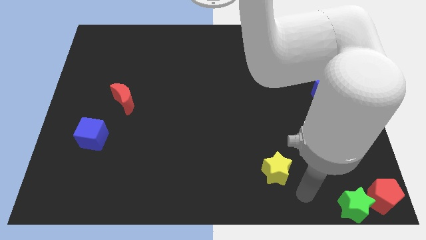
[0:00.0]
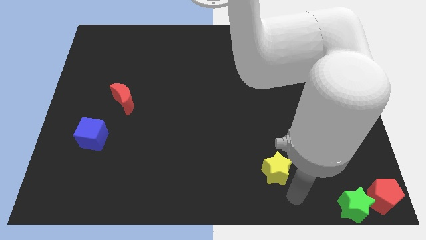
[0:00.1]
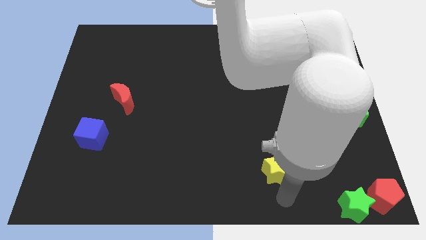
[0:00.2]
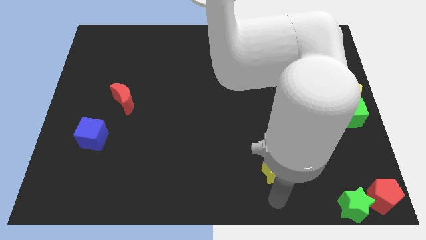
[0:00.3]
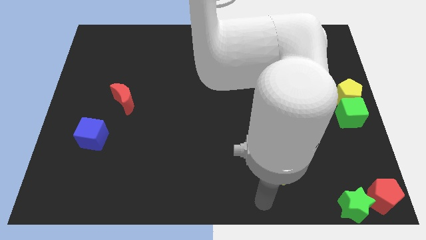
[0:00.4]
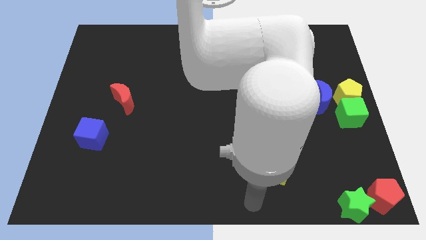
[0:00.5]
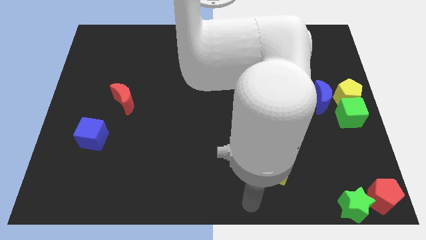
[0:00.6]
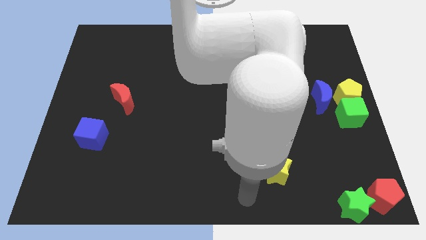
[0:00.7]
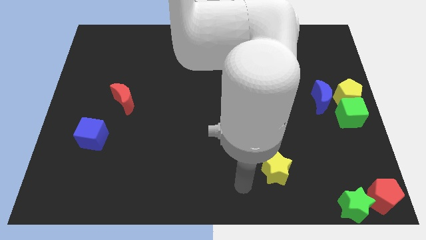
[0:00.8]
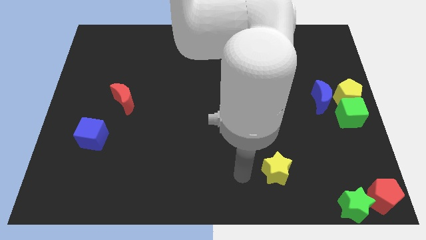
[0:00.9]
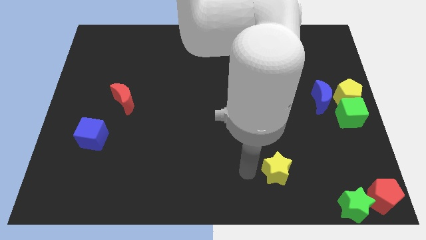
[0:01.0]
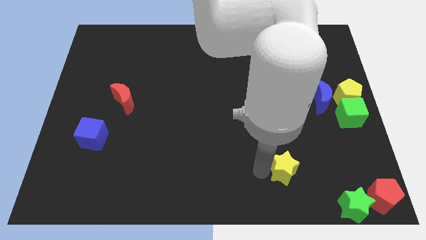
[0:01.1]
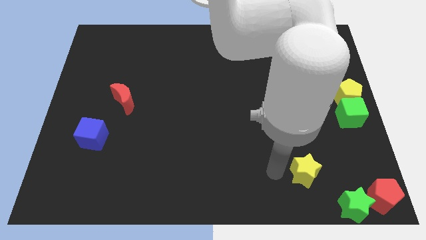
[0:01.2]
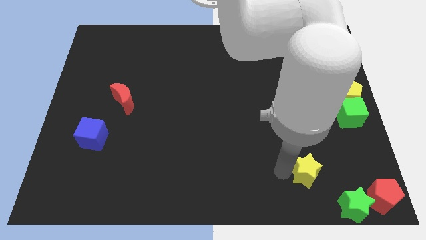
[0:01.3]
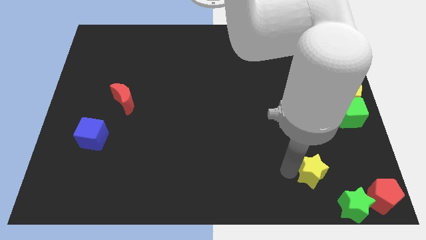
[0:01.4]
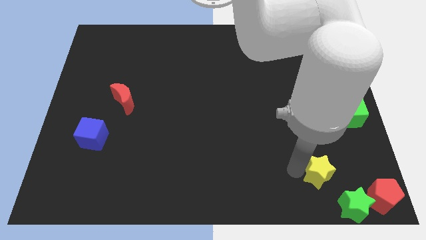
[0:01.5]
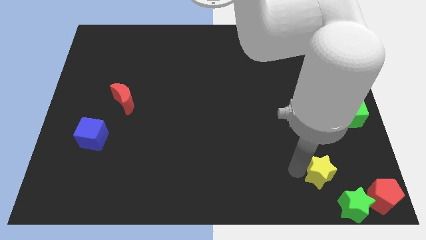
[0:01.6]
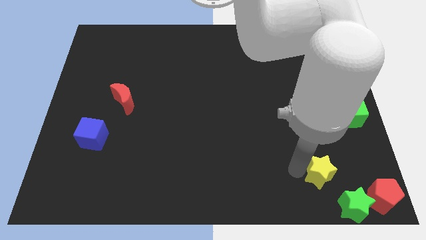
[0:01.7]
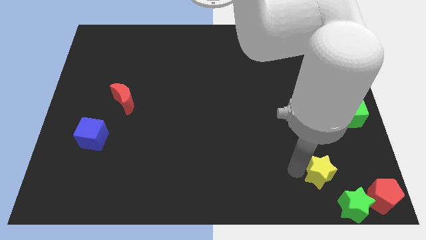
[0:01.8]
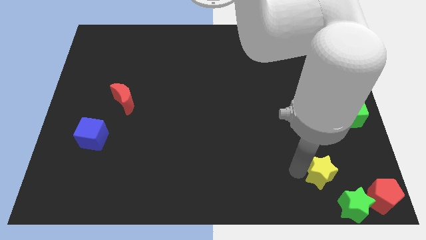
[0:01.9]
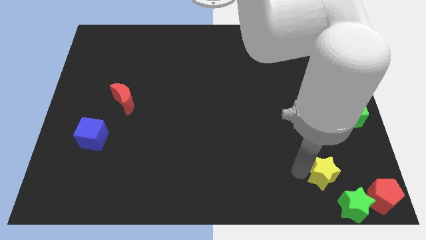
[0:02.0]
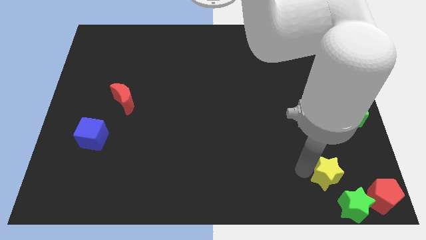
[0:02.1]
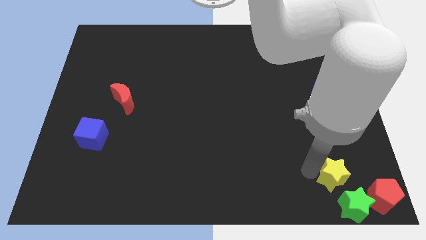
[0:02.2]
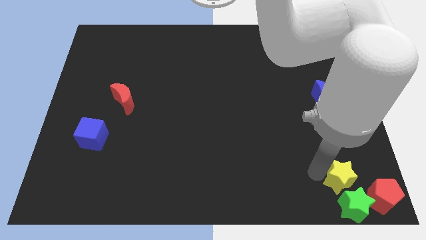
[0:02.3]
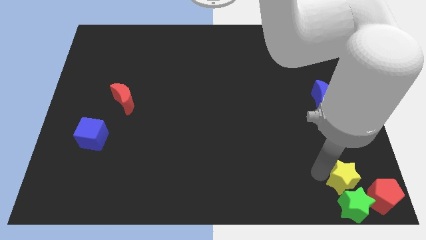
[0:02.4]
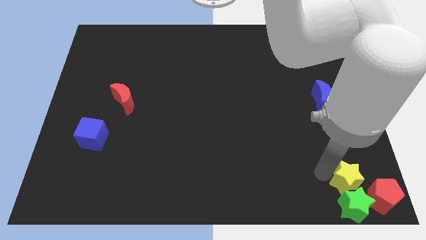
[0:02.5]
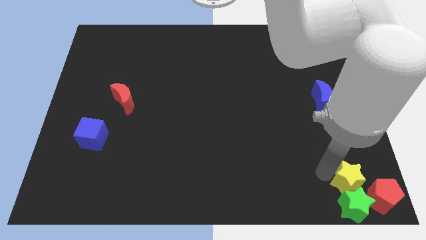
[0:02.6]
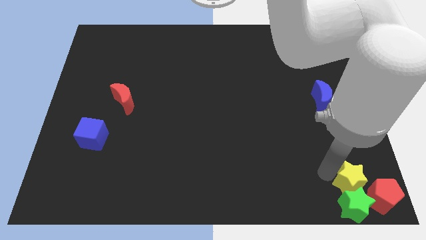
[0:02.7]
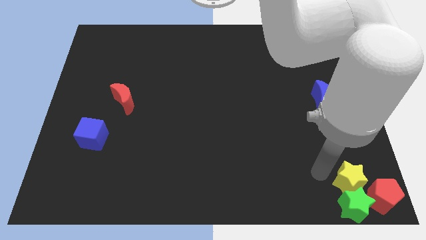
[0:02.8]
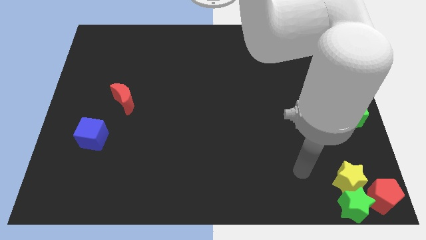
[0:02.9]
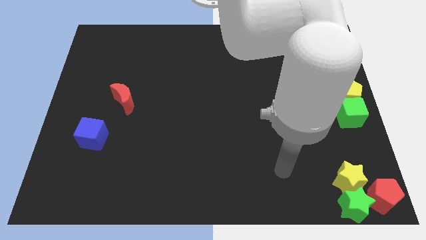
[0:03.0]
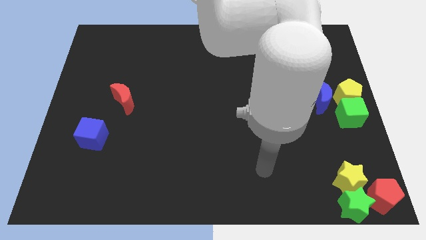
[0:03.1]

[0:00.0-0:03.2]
push the yellow star top to the green star

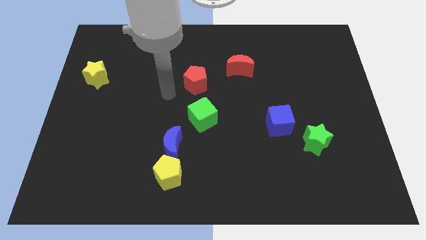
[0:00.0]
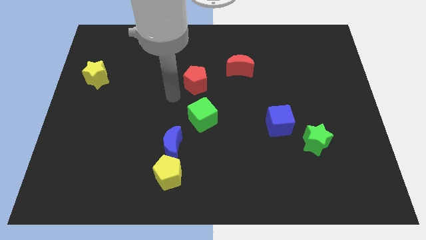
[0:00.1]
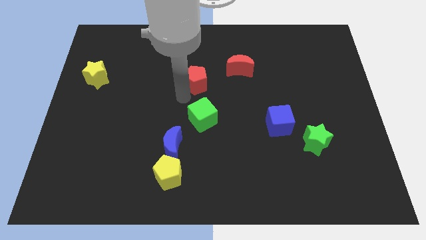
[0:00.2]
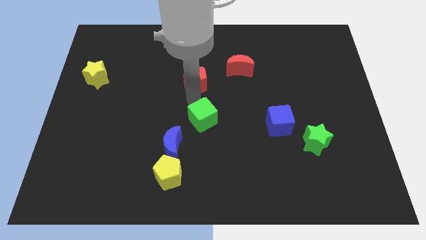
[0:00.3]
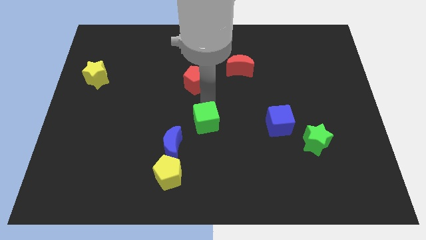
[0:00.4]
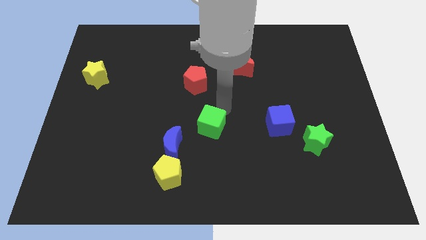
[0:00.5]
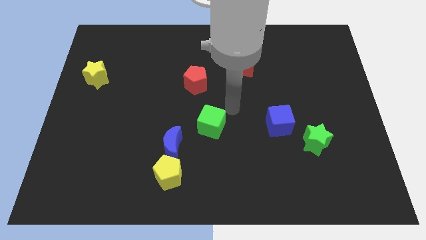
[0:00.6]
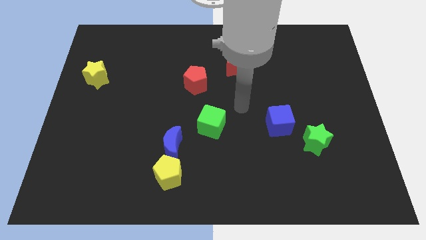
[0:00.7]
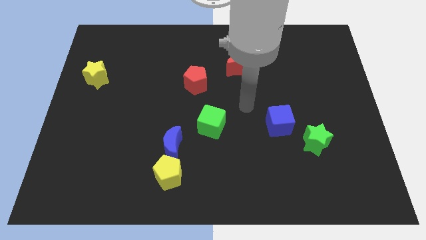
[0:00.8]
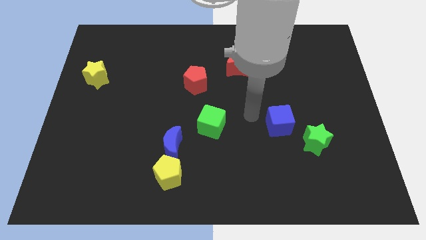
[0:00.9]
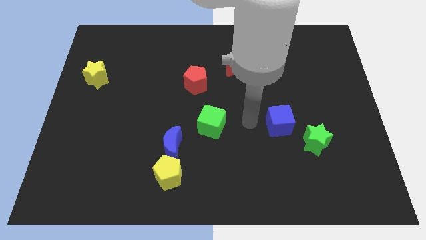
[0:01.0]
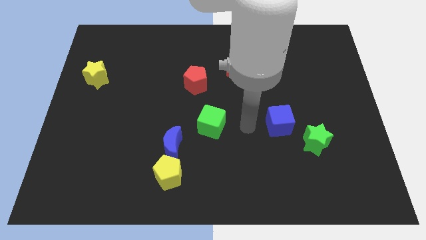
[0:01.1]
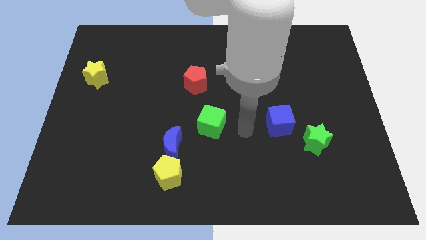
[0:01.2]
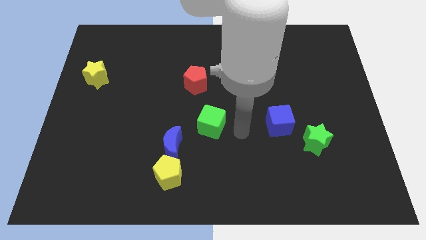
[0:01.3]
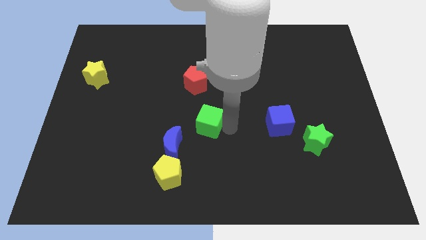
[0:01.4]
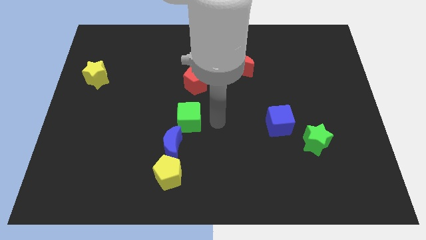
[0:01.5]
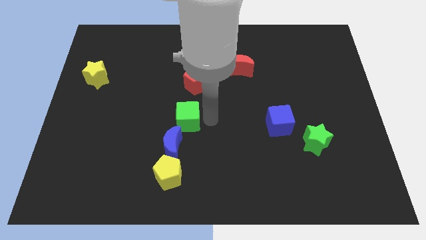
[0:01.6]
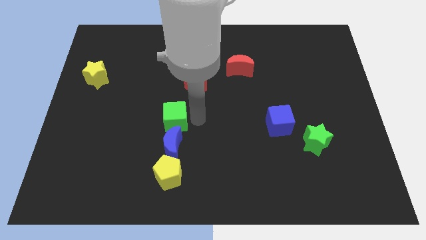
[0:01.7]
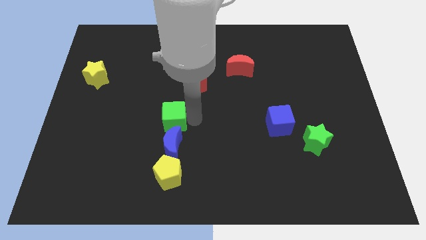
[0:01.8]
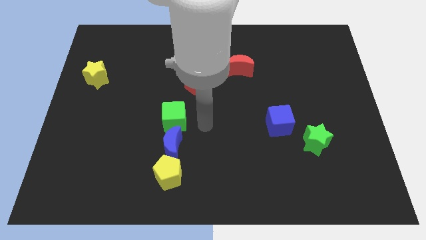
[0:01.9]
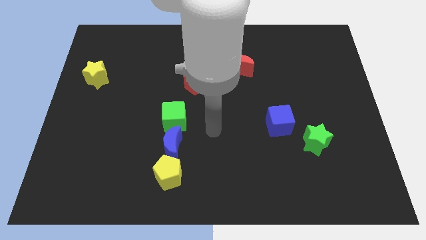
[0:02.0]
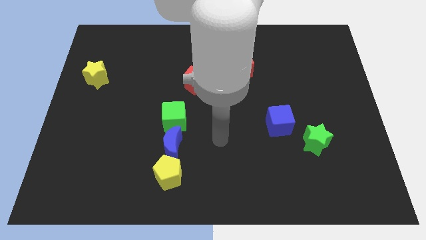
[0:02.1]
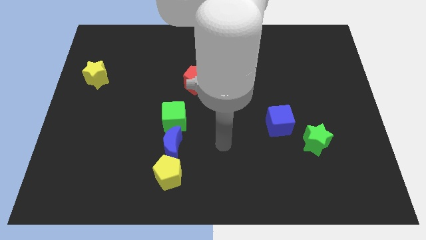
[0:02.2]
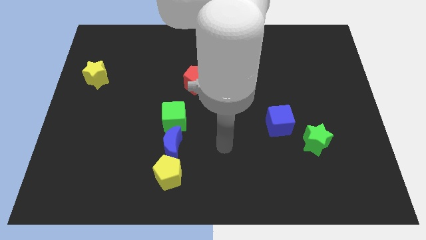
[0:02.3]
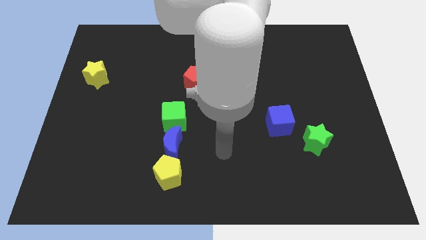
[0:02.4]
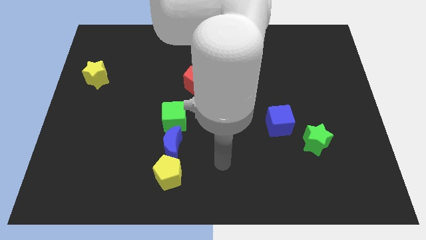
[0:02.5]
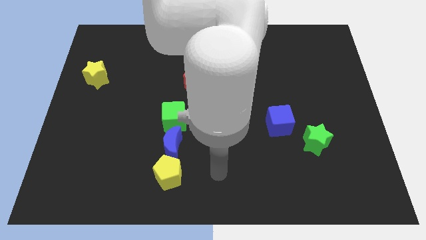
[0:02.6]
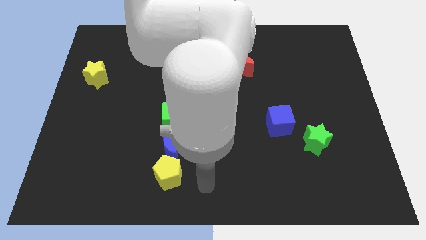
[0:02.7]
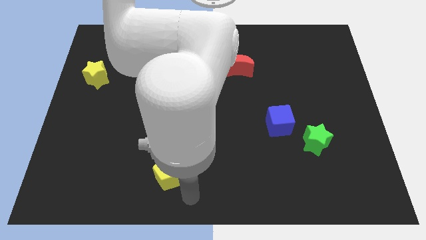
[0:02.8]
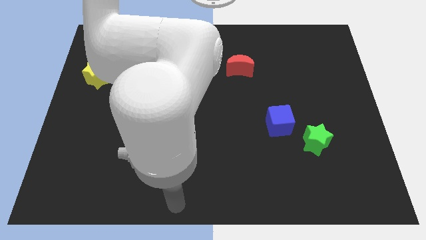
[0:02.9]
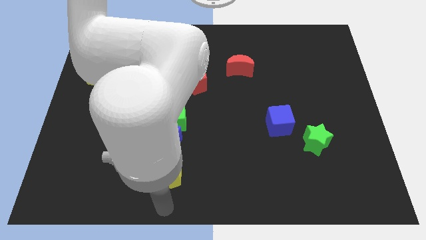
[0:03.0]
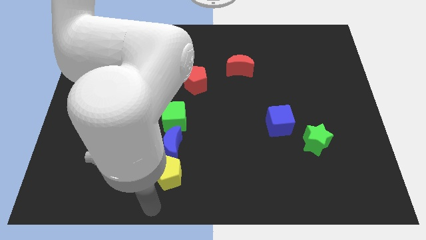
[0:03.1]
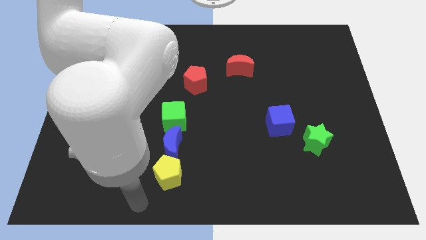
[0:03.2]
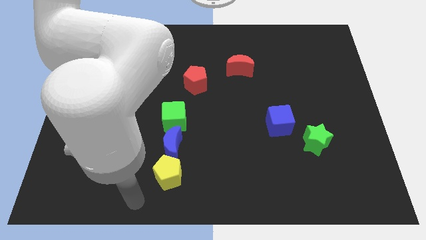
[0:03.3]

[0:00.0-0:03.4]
place the green cube above the blue crescent

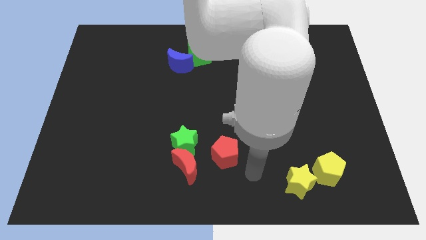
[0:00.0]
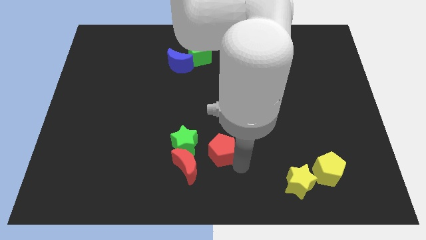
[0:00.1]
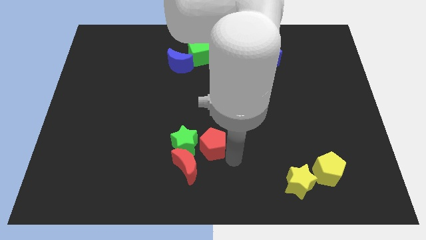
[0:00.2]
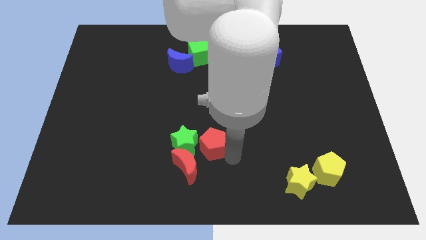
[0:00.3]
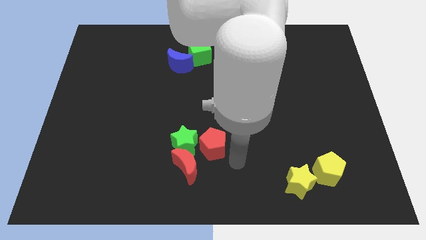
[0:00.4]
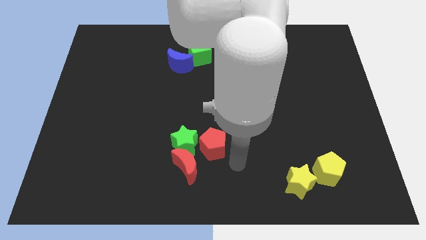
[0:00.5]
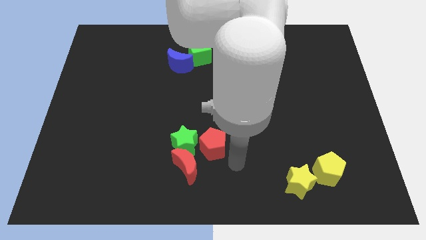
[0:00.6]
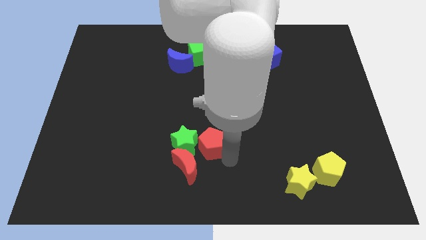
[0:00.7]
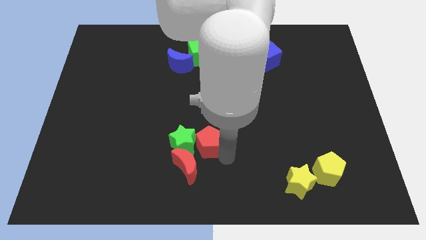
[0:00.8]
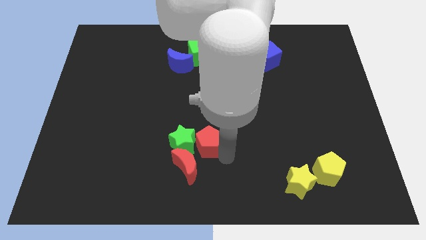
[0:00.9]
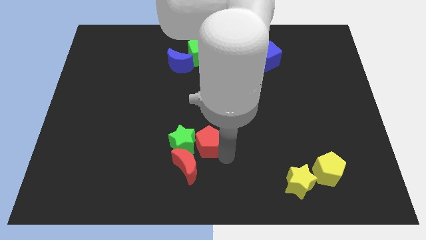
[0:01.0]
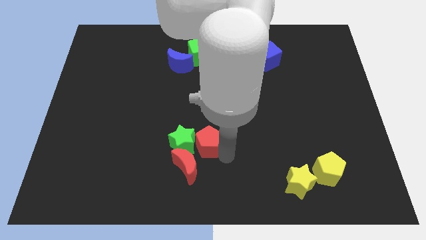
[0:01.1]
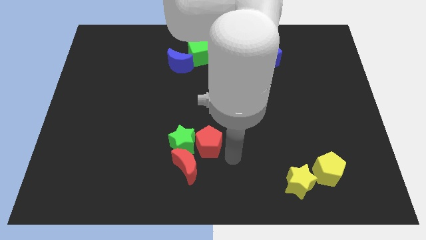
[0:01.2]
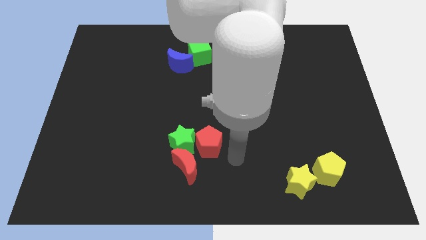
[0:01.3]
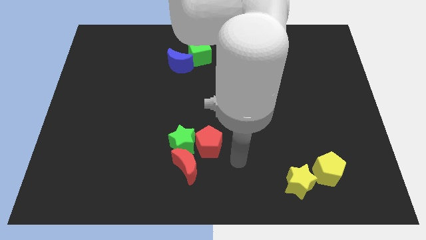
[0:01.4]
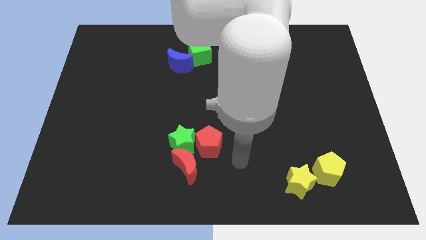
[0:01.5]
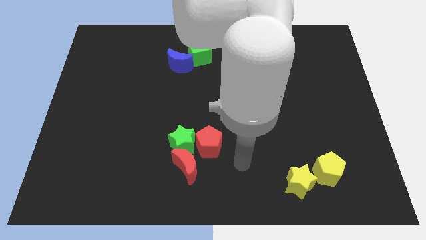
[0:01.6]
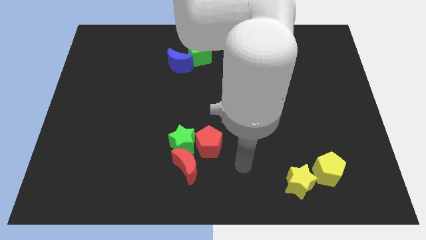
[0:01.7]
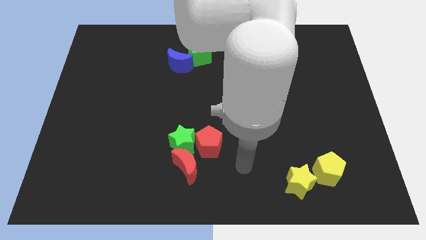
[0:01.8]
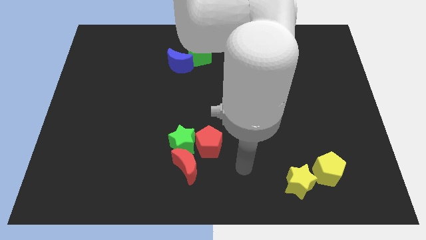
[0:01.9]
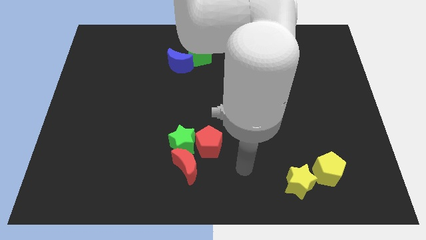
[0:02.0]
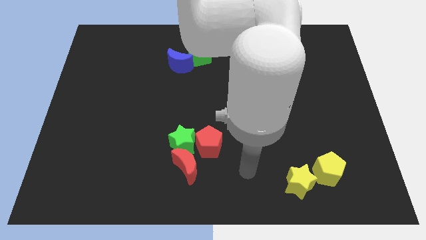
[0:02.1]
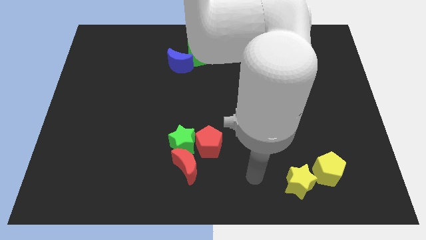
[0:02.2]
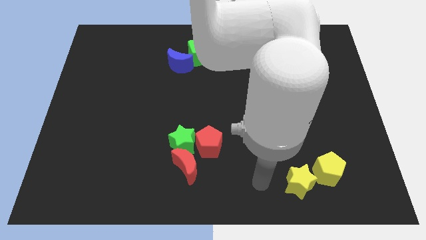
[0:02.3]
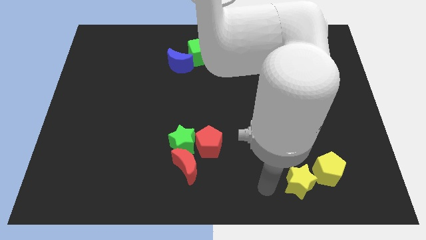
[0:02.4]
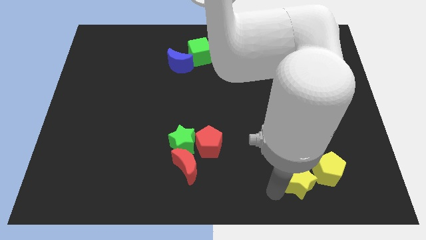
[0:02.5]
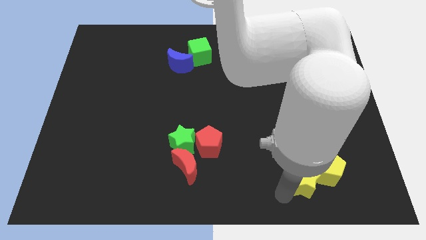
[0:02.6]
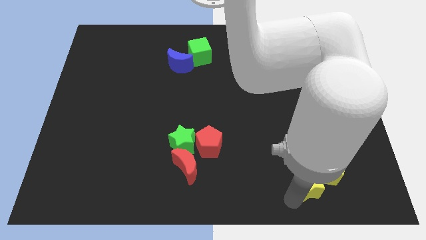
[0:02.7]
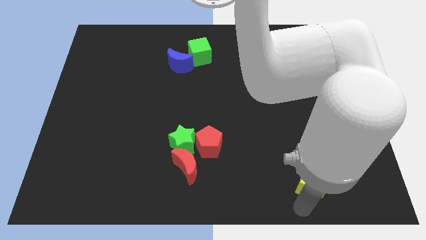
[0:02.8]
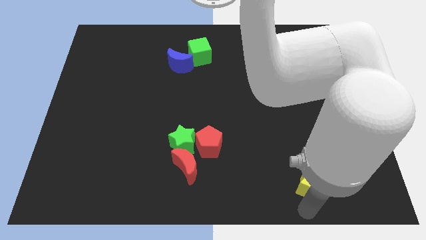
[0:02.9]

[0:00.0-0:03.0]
push the red pentagon into green star
